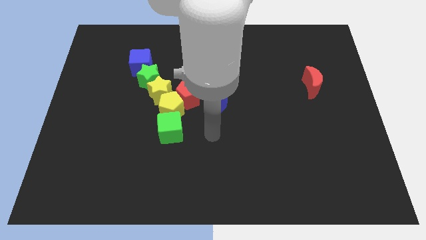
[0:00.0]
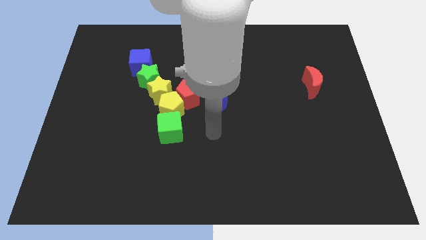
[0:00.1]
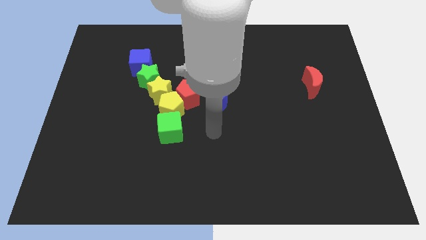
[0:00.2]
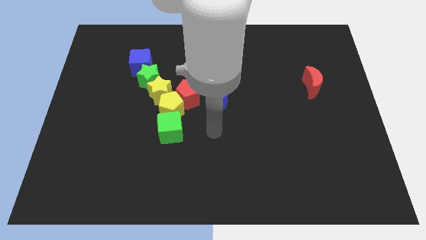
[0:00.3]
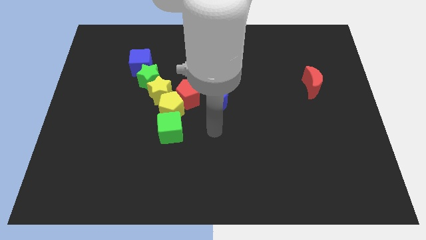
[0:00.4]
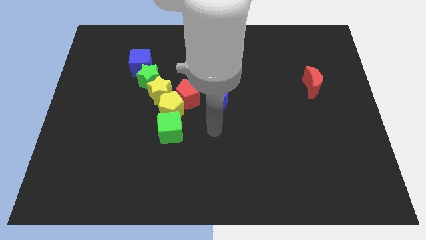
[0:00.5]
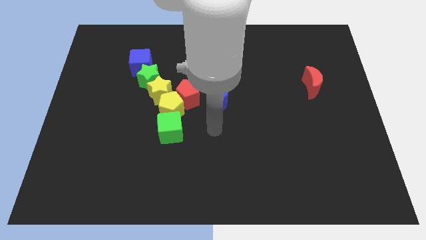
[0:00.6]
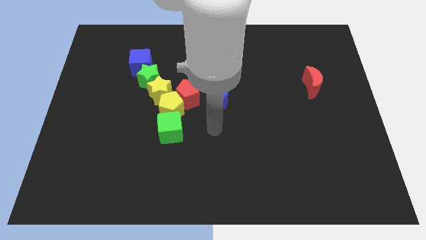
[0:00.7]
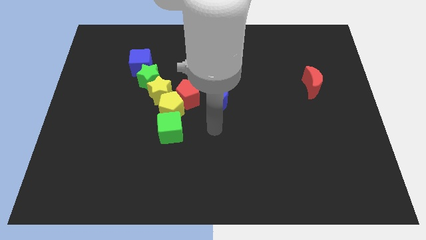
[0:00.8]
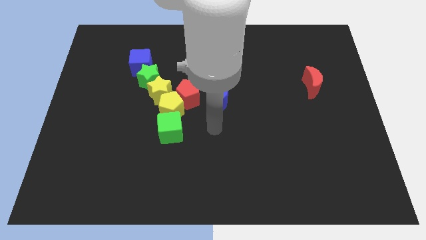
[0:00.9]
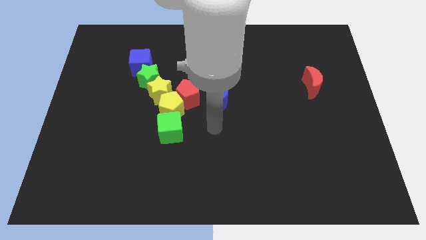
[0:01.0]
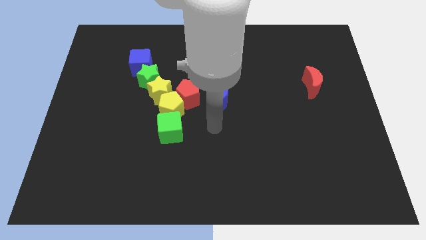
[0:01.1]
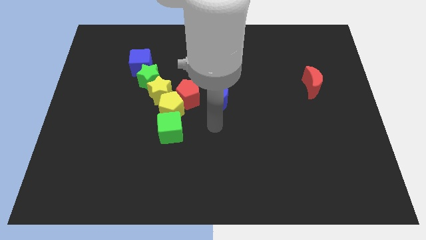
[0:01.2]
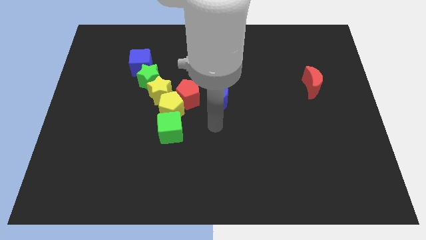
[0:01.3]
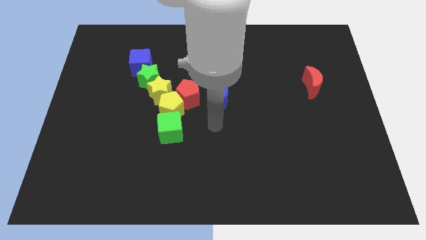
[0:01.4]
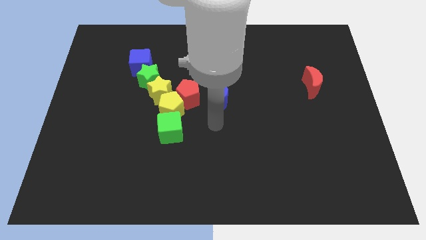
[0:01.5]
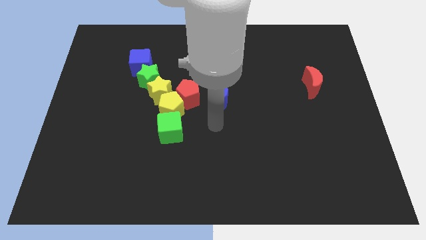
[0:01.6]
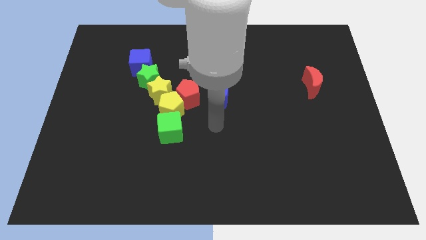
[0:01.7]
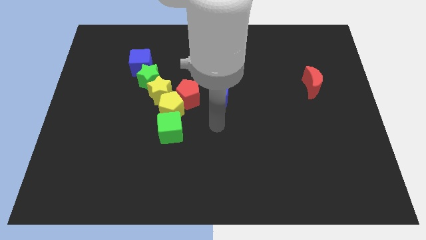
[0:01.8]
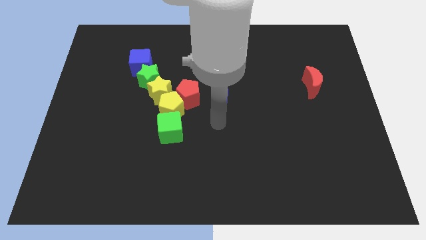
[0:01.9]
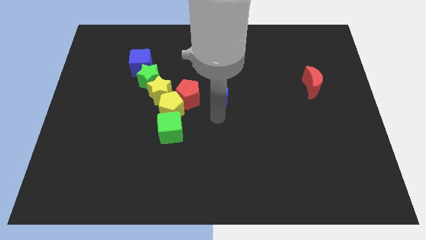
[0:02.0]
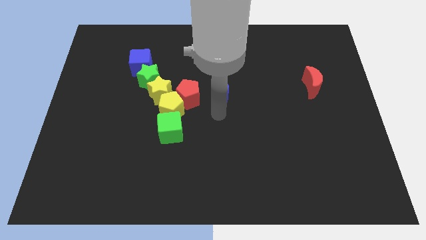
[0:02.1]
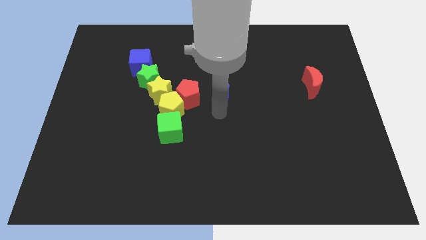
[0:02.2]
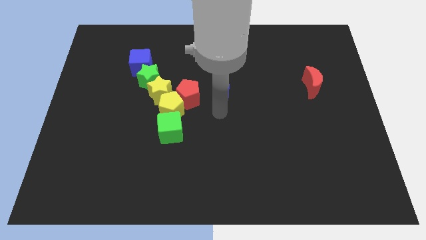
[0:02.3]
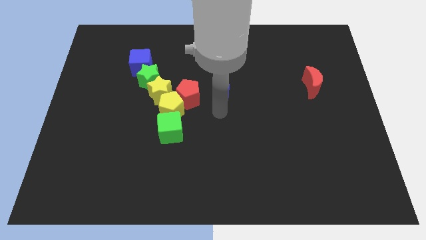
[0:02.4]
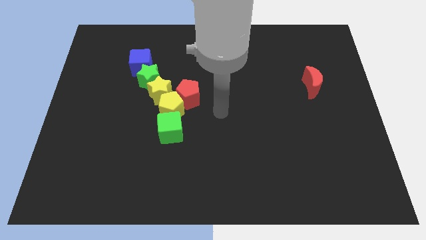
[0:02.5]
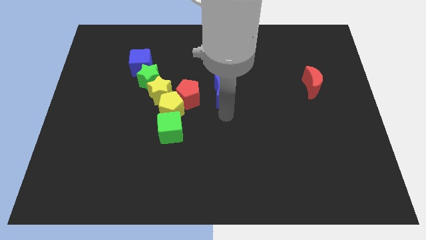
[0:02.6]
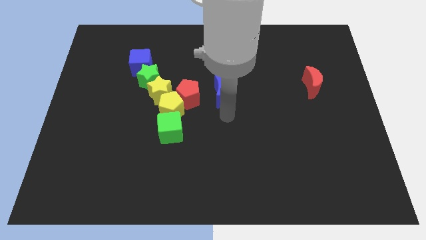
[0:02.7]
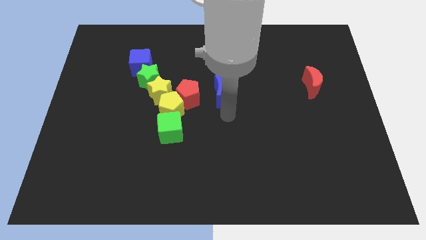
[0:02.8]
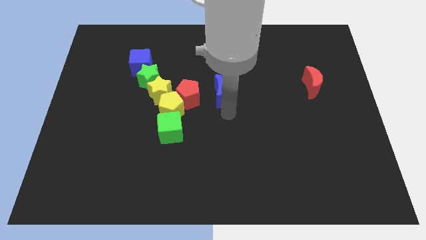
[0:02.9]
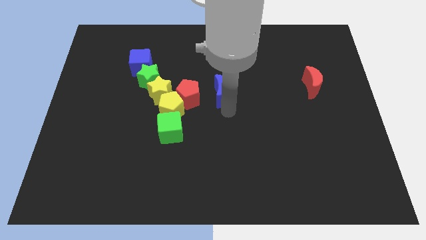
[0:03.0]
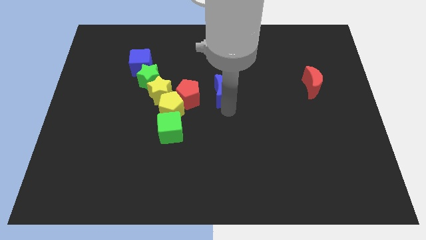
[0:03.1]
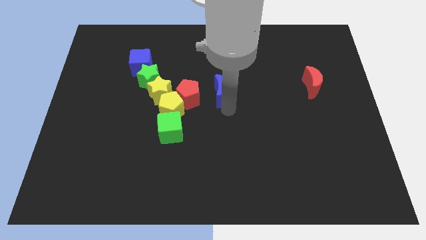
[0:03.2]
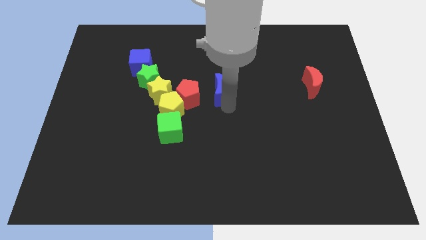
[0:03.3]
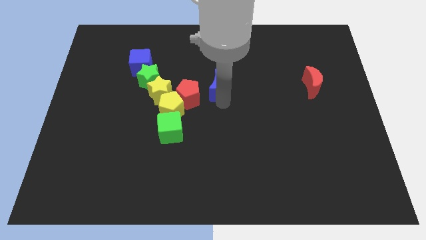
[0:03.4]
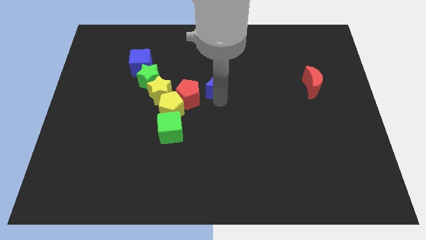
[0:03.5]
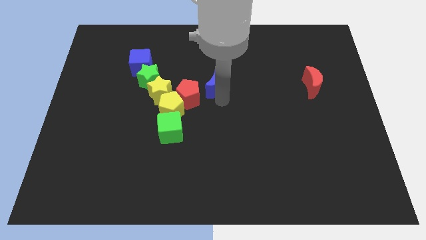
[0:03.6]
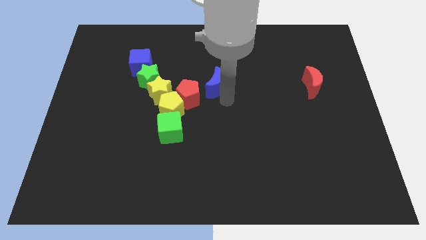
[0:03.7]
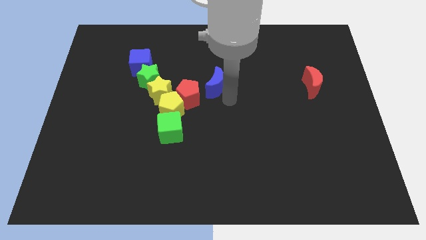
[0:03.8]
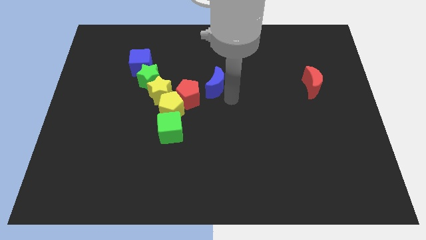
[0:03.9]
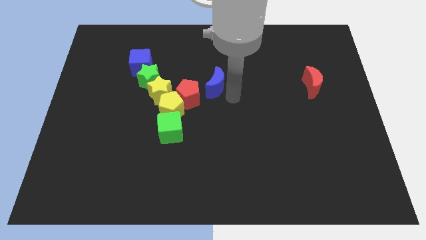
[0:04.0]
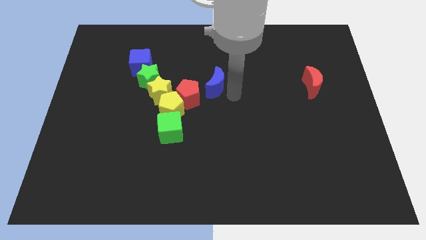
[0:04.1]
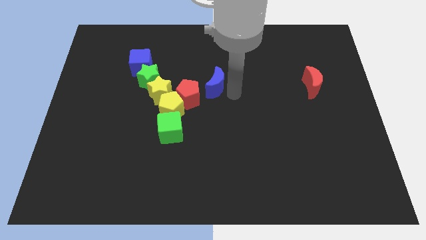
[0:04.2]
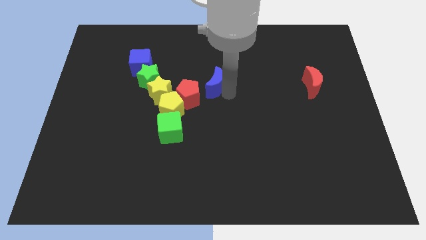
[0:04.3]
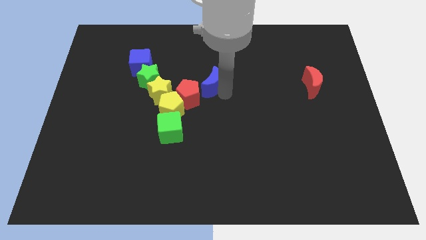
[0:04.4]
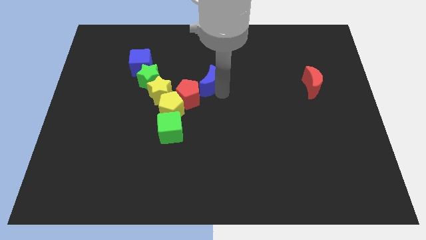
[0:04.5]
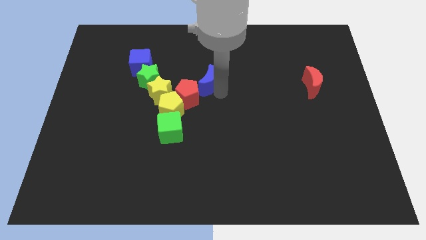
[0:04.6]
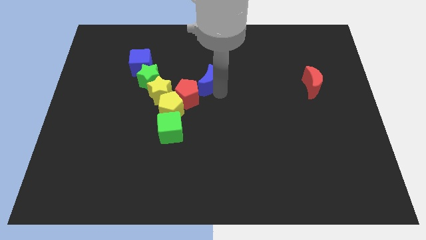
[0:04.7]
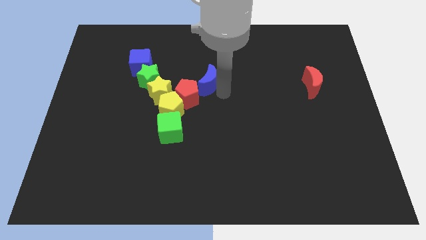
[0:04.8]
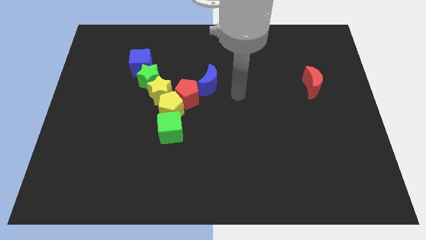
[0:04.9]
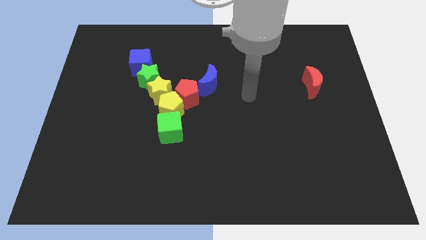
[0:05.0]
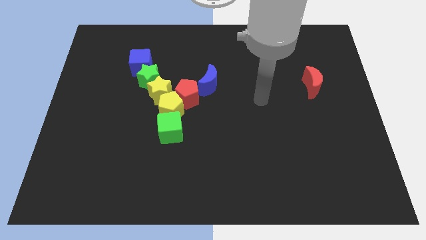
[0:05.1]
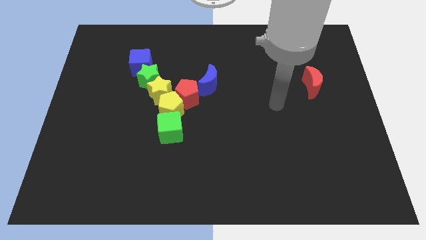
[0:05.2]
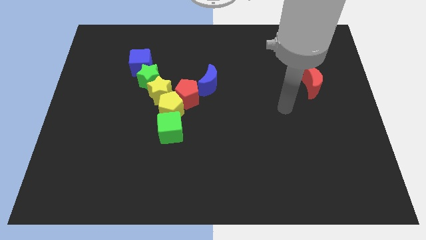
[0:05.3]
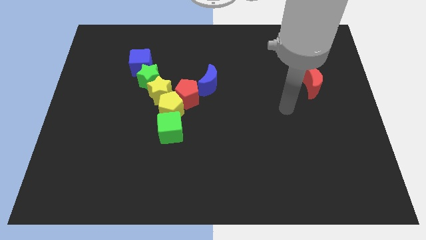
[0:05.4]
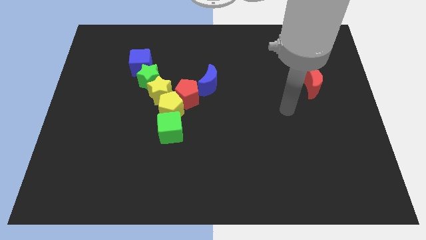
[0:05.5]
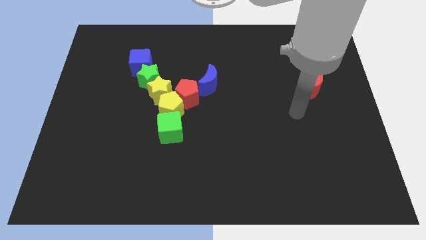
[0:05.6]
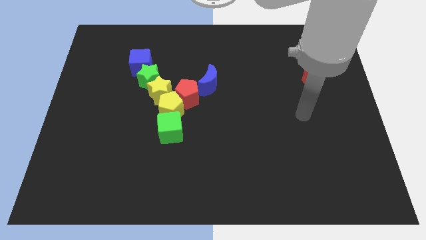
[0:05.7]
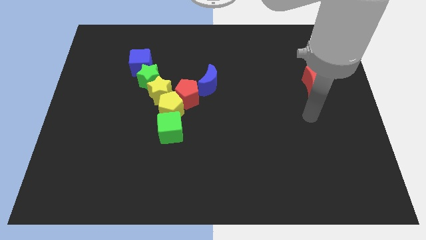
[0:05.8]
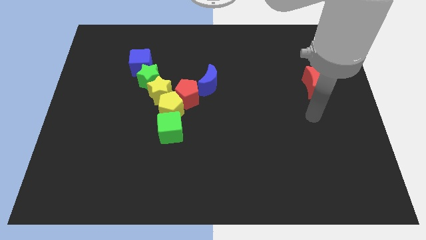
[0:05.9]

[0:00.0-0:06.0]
move the blue moon into the red pentagon

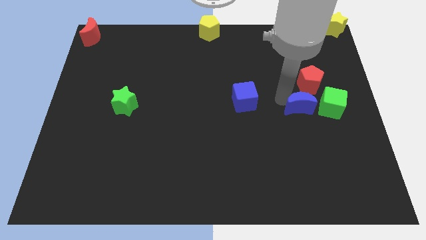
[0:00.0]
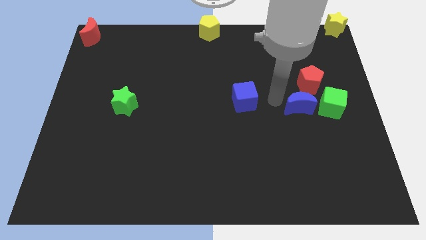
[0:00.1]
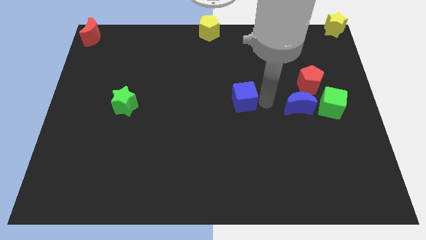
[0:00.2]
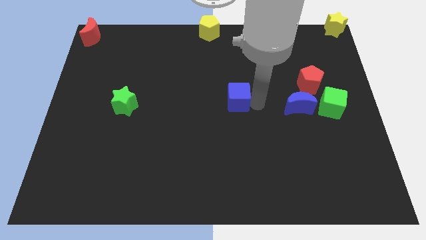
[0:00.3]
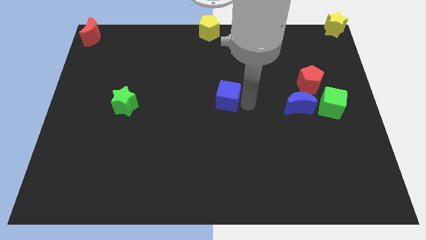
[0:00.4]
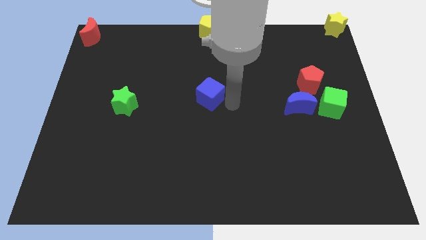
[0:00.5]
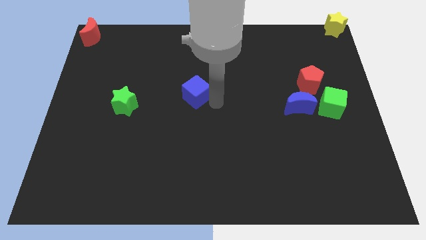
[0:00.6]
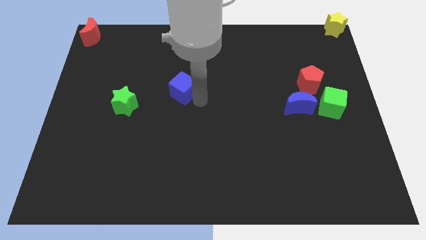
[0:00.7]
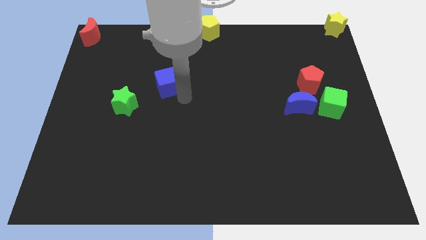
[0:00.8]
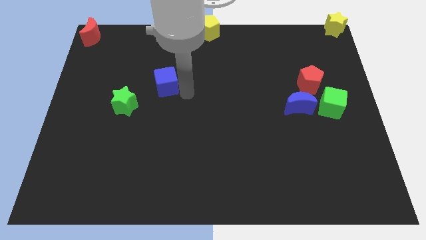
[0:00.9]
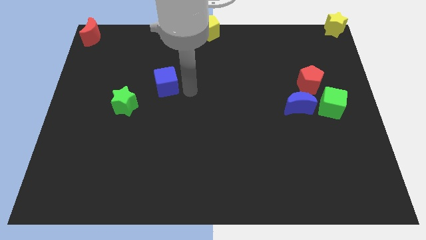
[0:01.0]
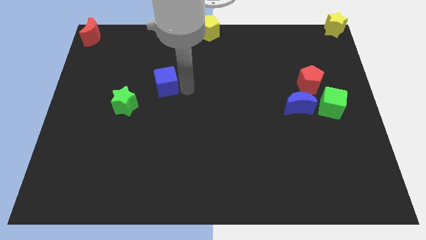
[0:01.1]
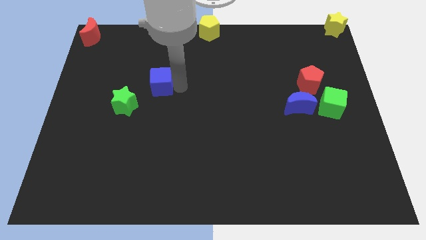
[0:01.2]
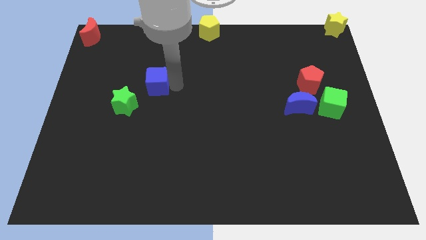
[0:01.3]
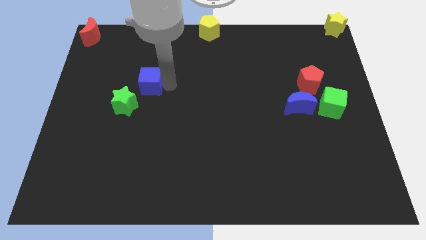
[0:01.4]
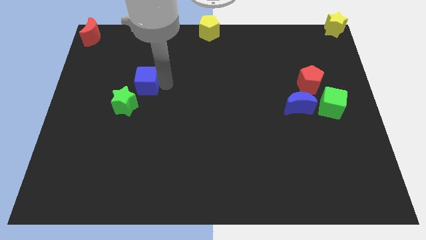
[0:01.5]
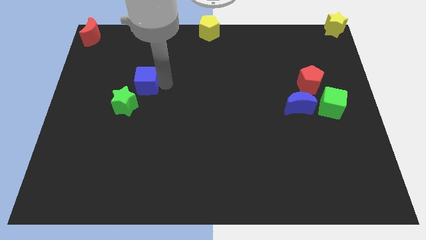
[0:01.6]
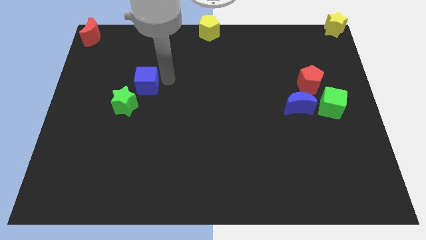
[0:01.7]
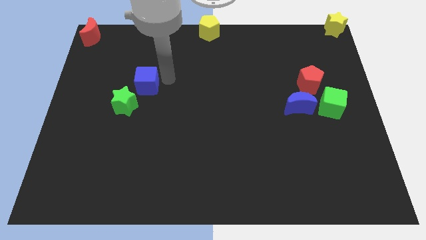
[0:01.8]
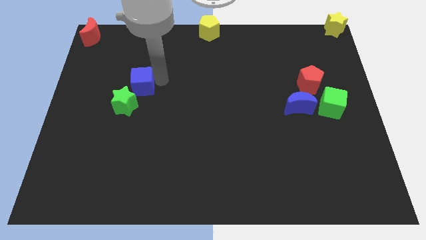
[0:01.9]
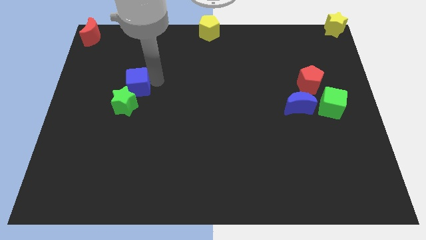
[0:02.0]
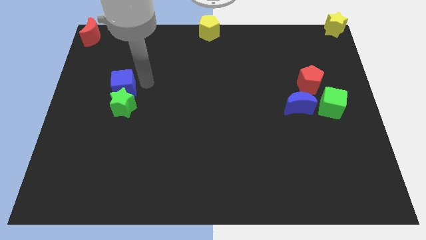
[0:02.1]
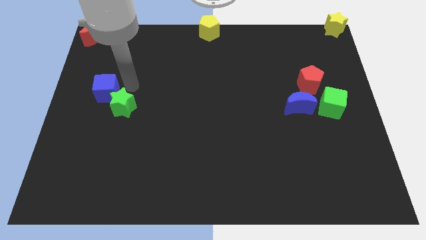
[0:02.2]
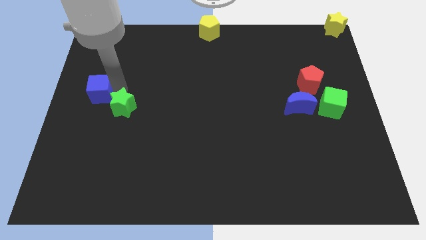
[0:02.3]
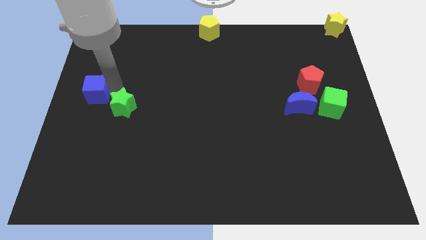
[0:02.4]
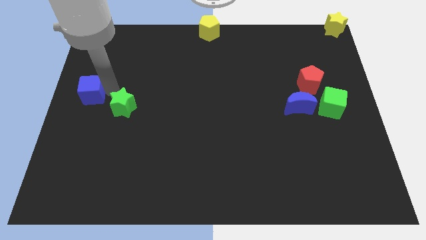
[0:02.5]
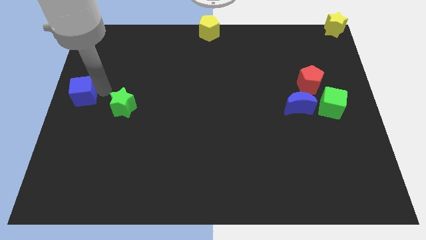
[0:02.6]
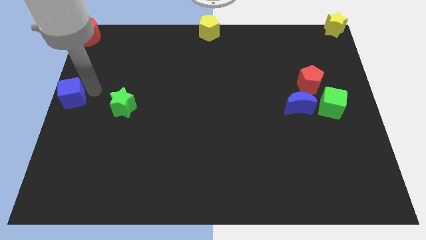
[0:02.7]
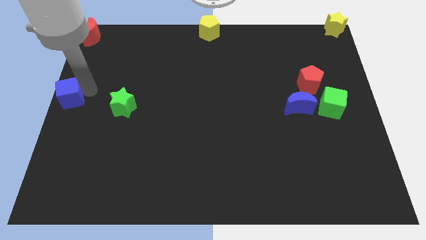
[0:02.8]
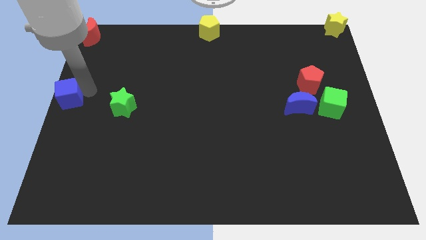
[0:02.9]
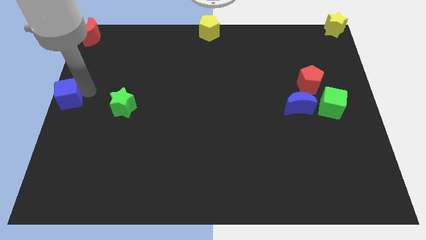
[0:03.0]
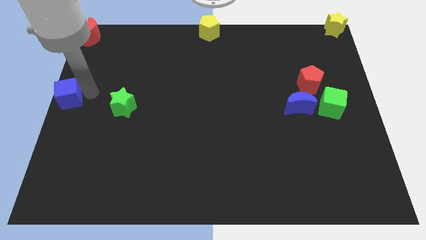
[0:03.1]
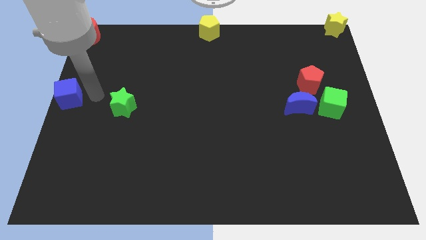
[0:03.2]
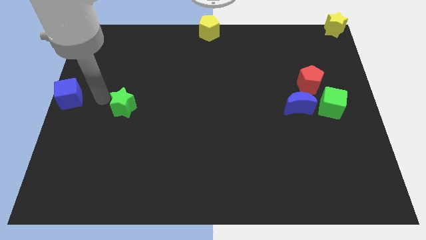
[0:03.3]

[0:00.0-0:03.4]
place blue cube at the left center of the board
